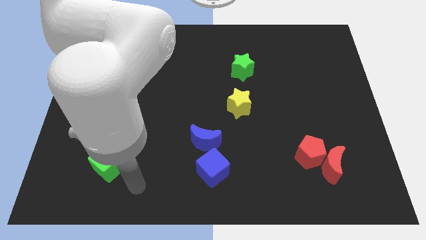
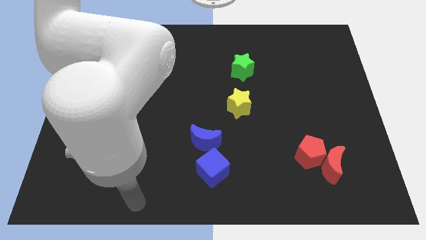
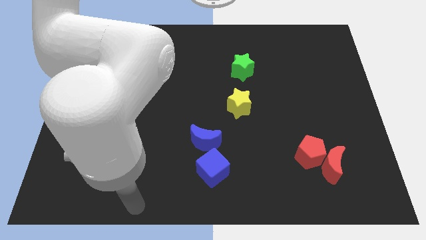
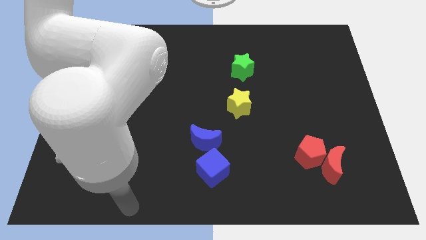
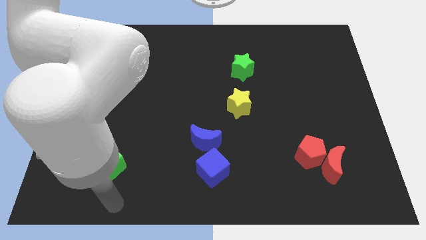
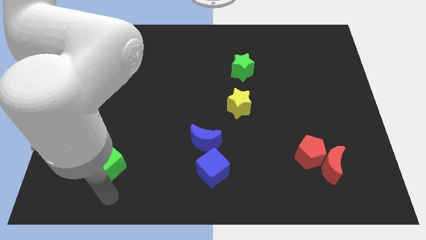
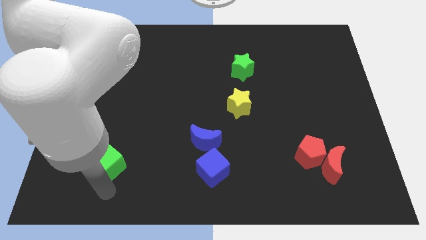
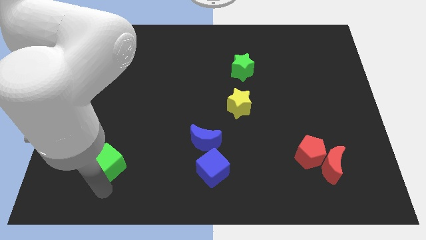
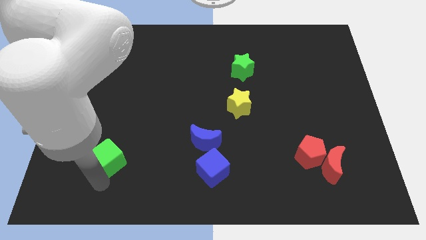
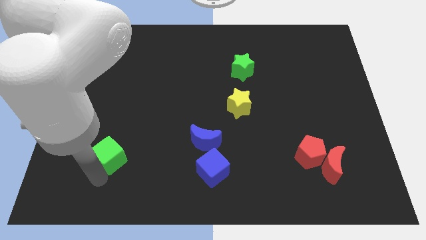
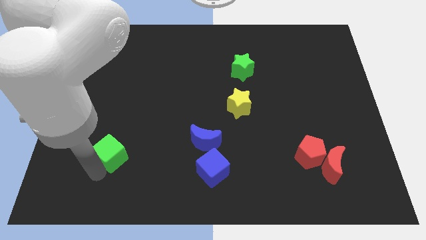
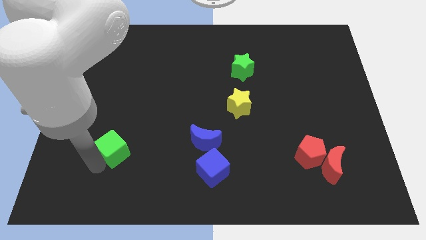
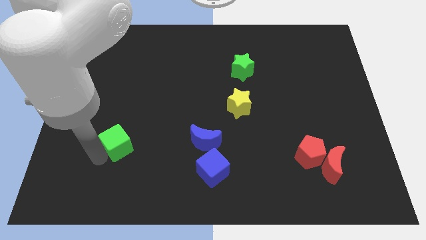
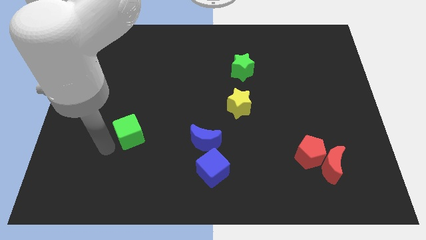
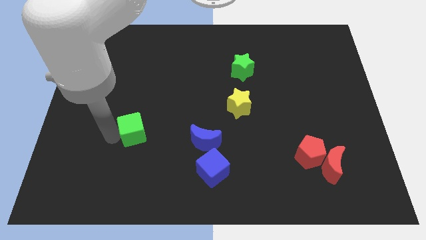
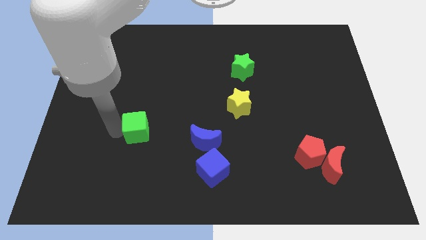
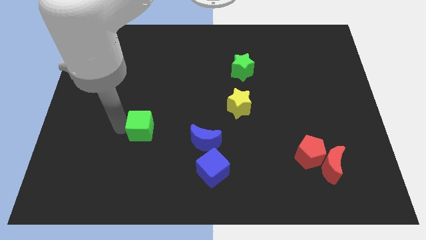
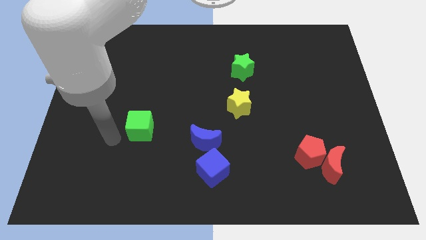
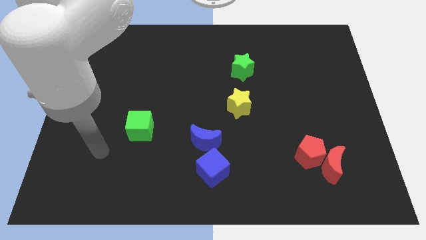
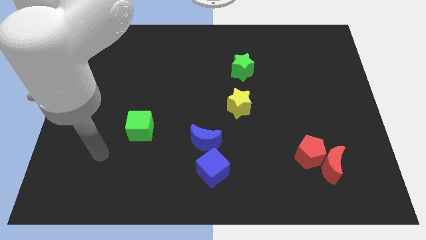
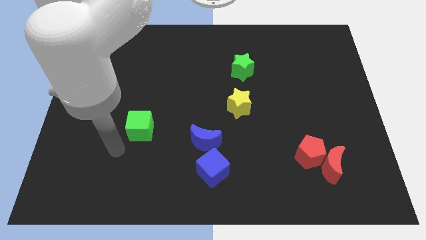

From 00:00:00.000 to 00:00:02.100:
push green cube to the top left of blue moon

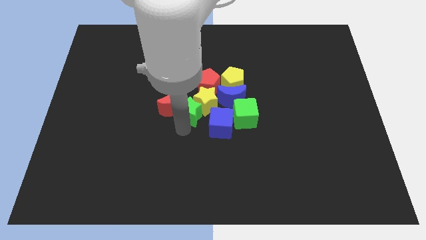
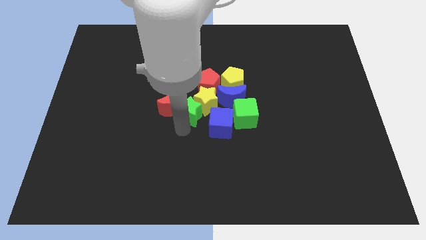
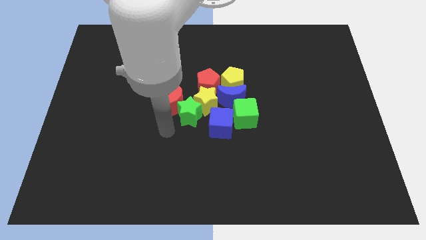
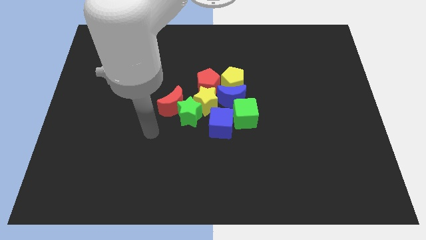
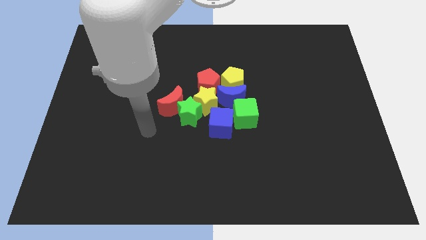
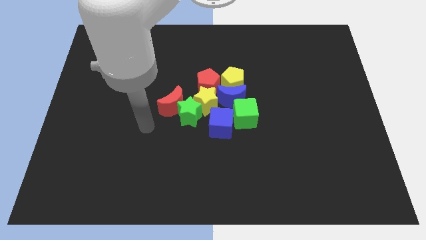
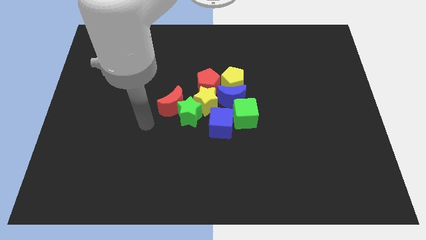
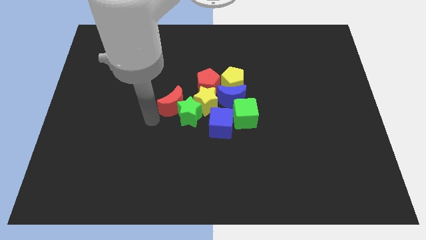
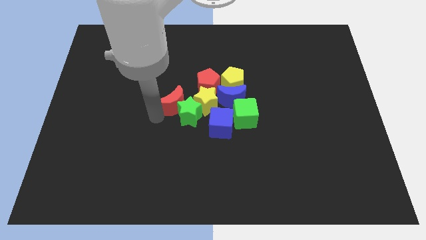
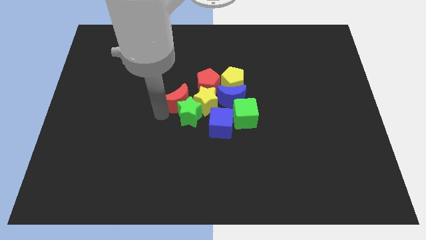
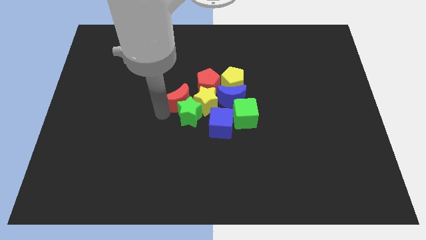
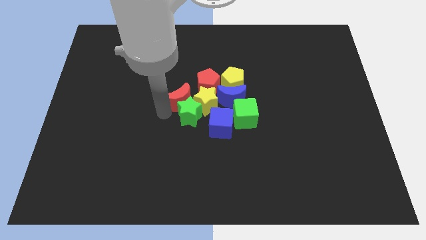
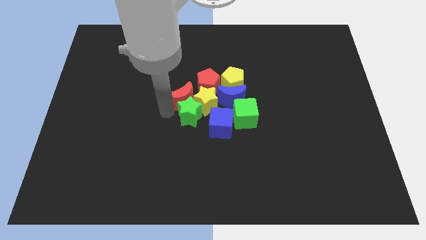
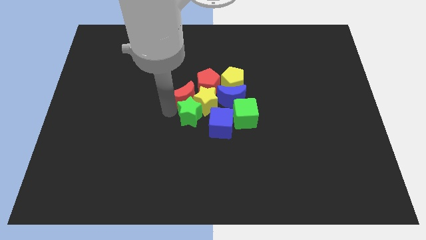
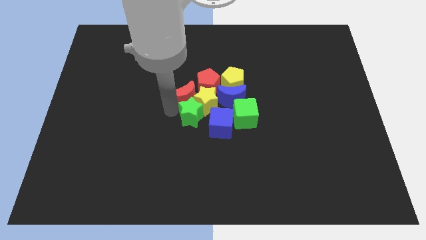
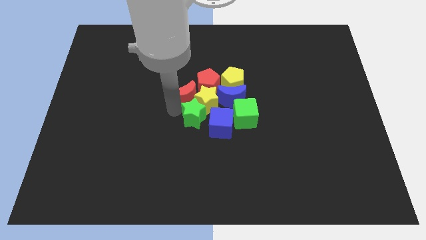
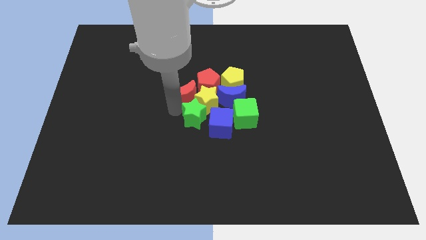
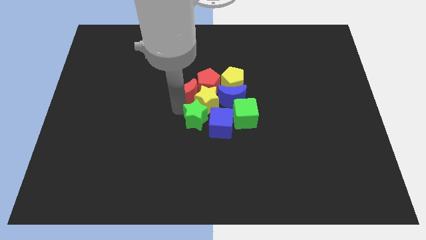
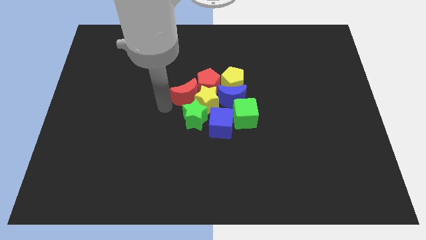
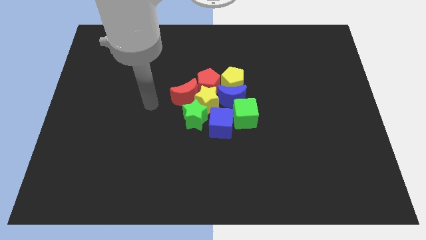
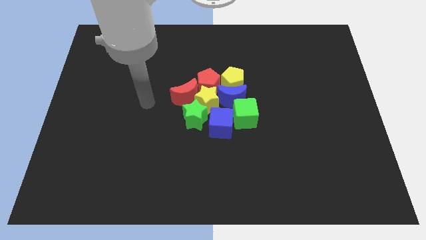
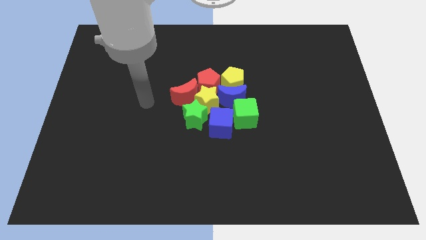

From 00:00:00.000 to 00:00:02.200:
push red moon into red pentagon

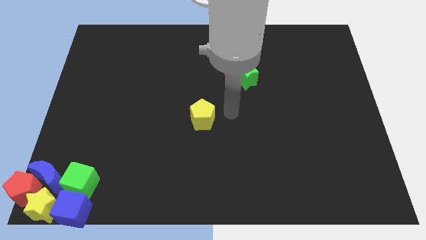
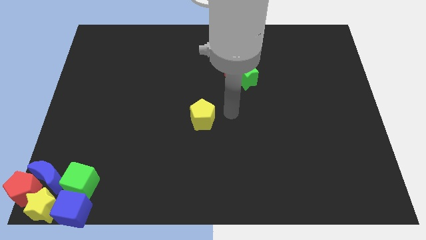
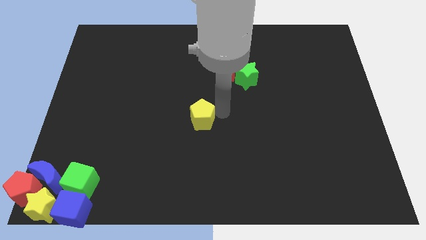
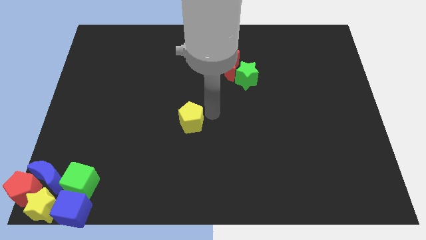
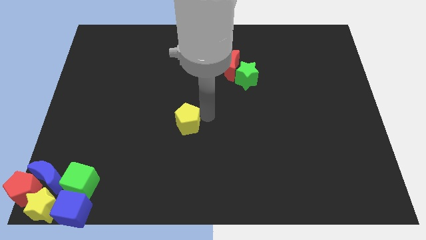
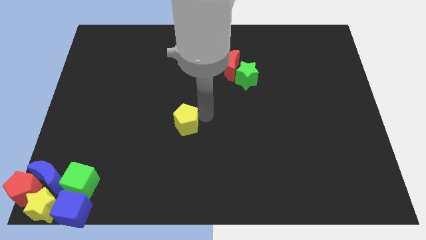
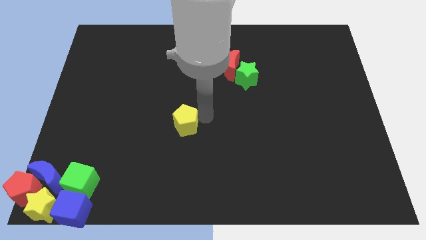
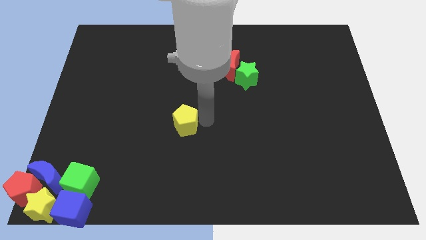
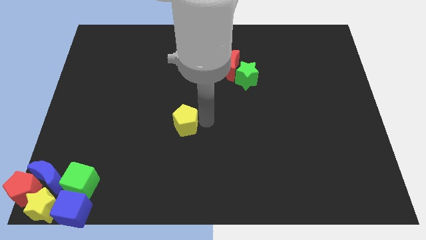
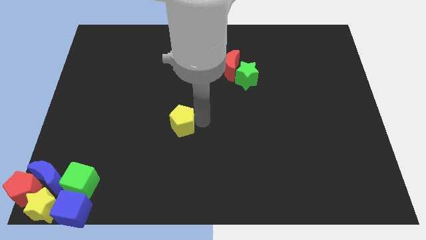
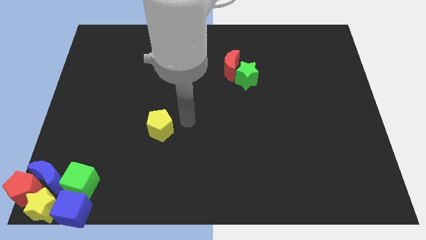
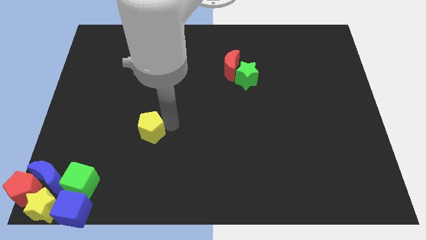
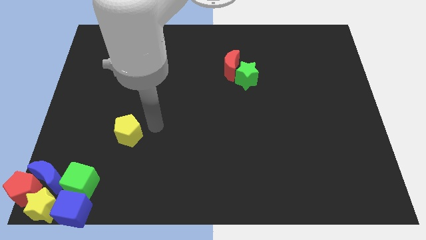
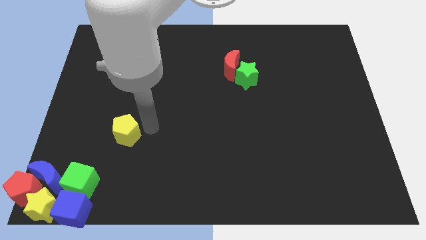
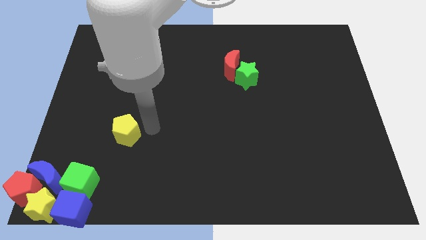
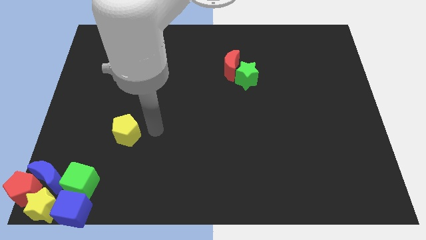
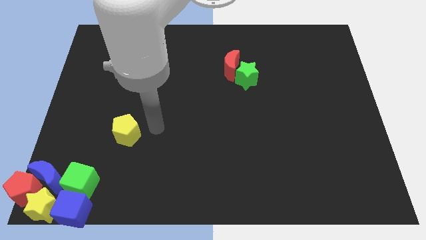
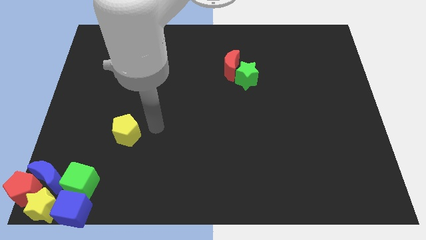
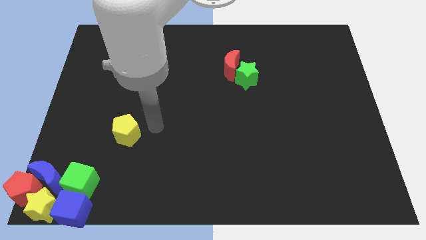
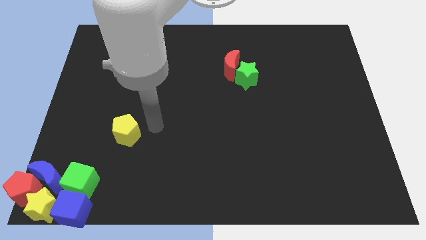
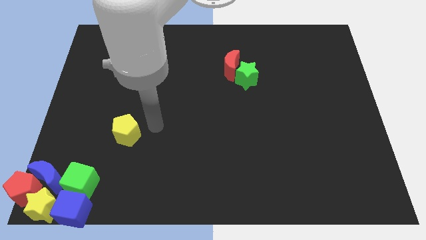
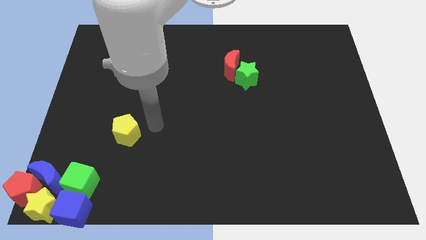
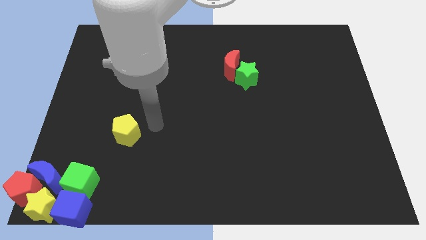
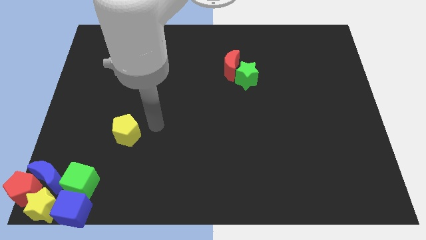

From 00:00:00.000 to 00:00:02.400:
place the yellow pentagon diagonally bottom left to the red moon

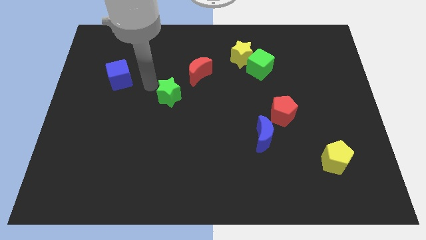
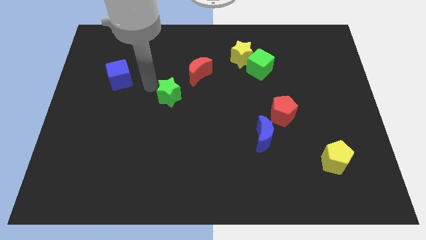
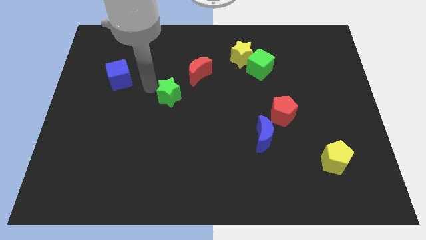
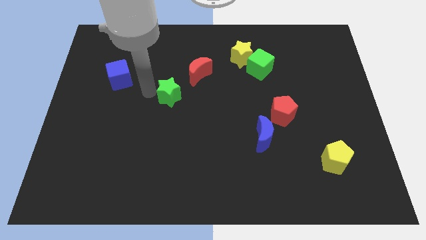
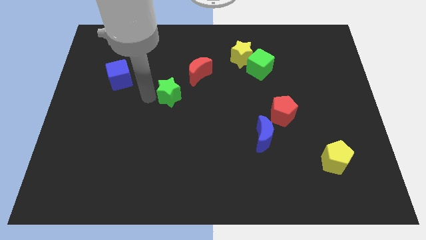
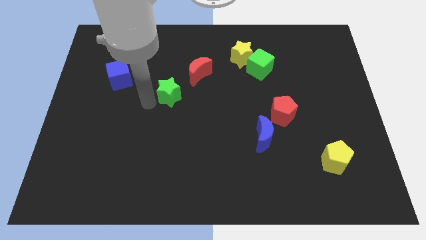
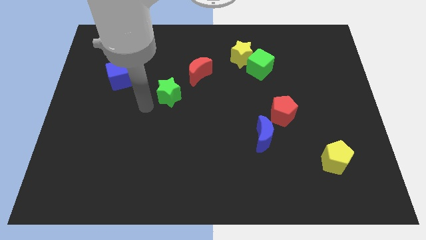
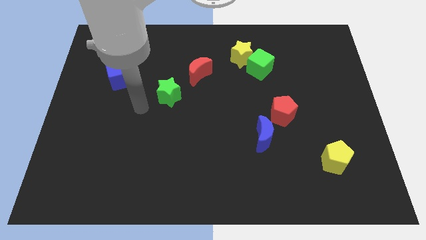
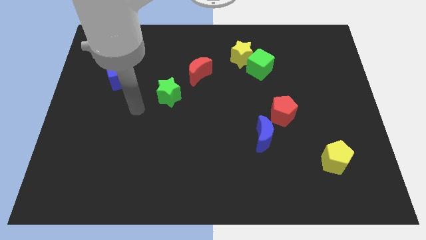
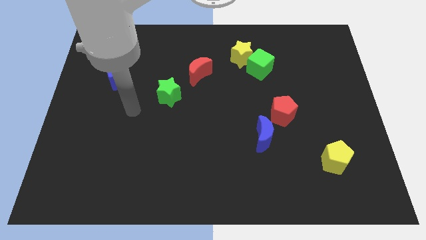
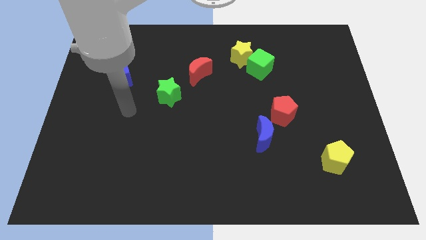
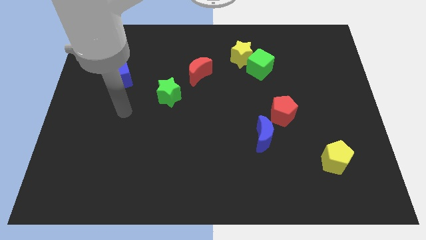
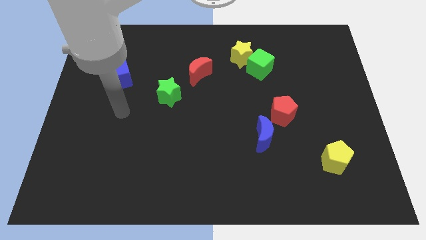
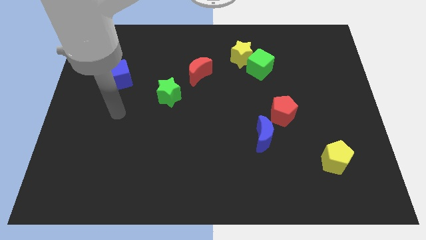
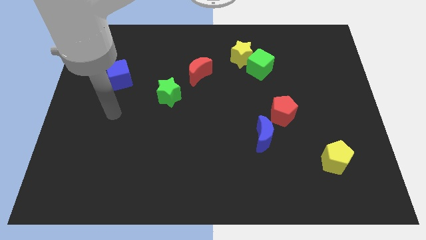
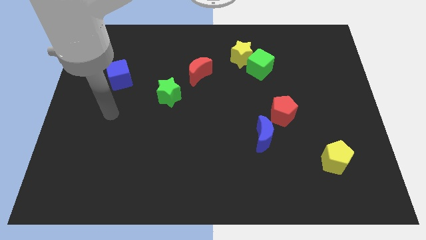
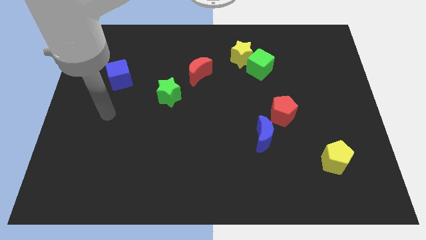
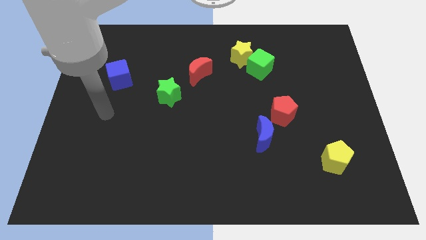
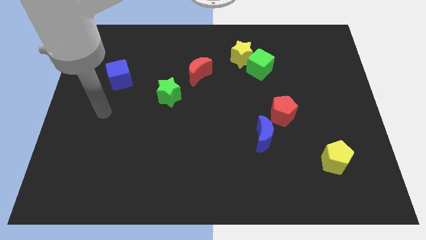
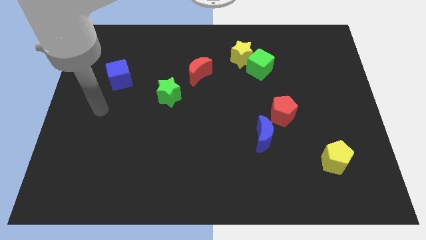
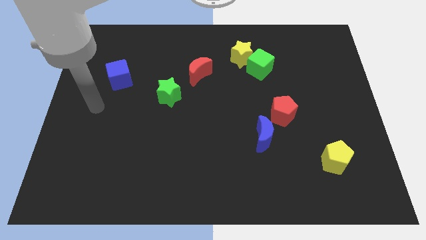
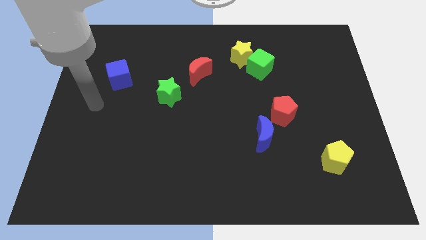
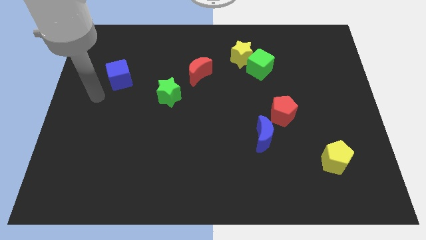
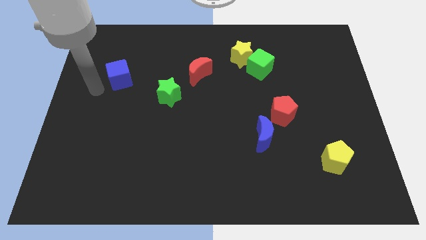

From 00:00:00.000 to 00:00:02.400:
move your arm towards the left of the blue cube
